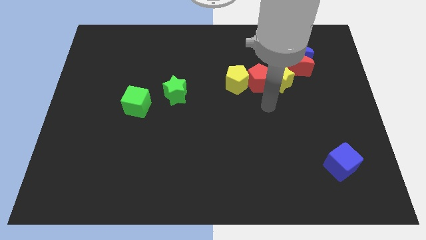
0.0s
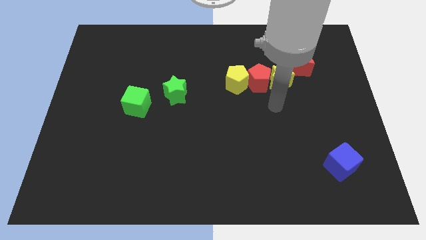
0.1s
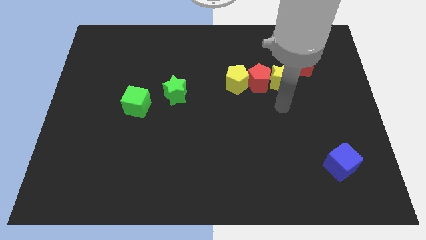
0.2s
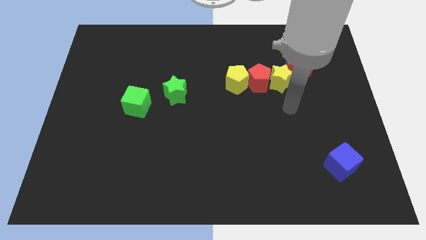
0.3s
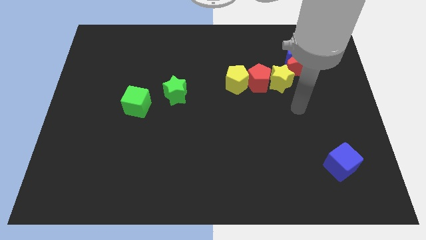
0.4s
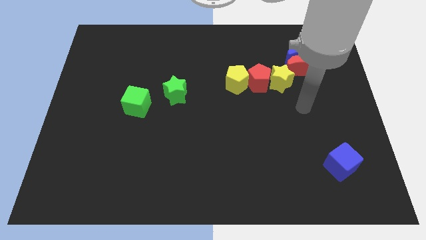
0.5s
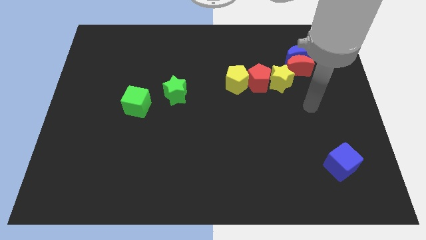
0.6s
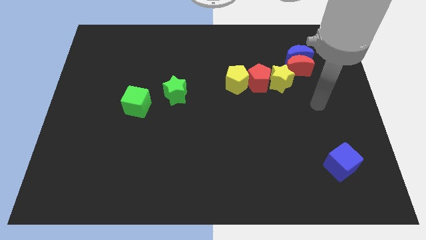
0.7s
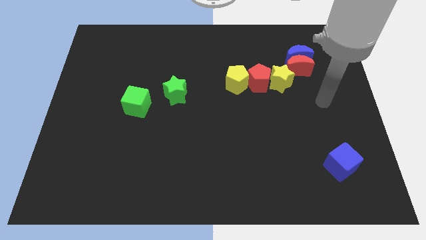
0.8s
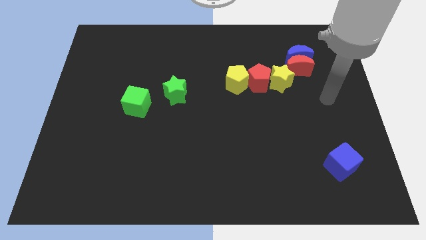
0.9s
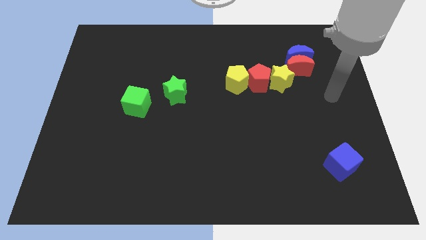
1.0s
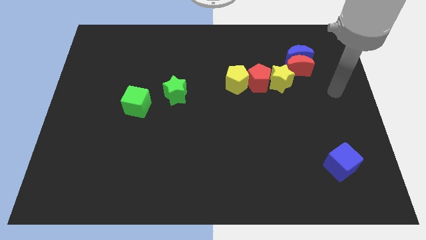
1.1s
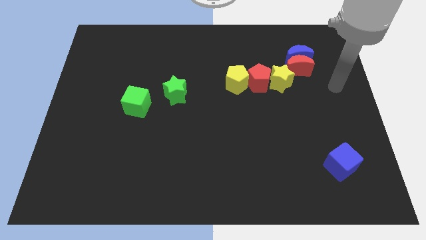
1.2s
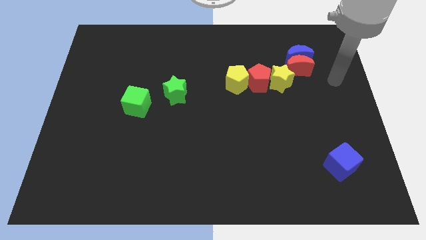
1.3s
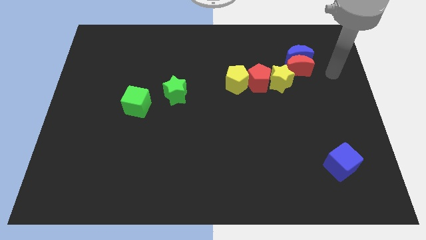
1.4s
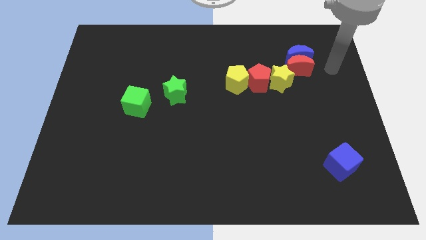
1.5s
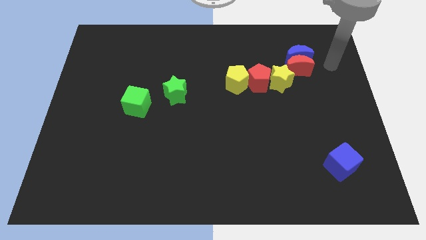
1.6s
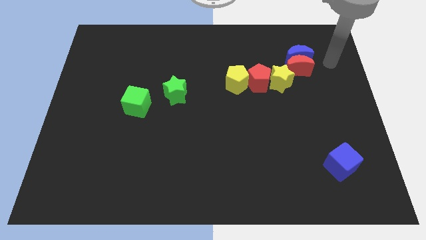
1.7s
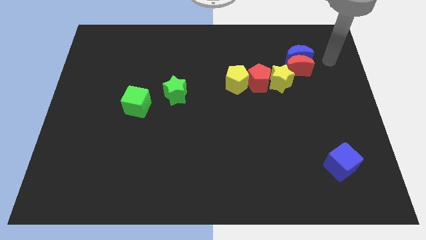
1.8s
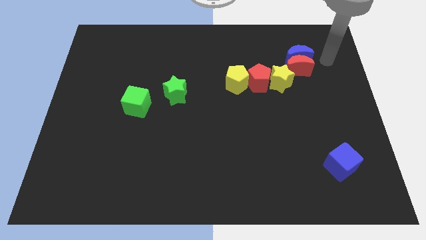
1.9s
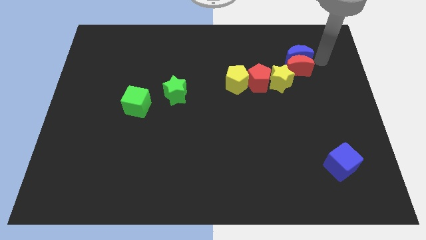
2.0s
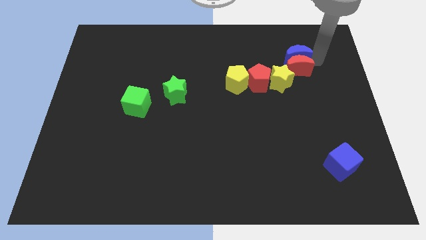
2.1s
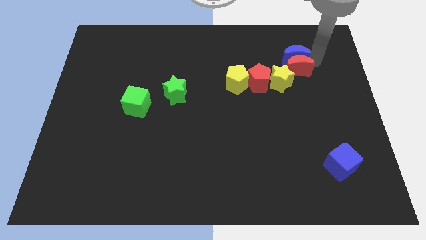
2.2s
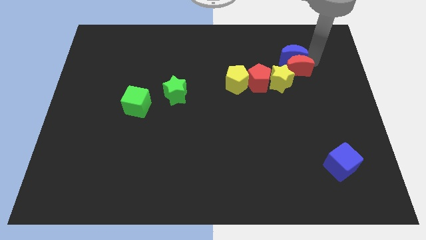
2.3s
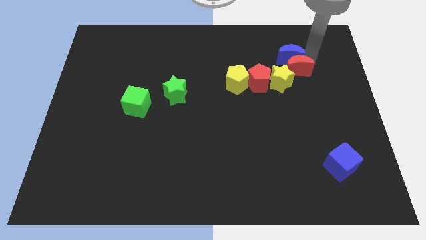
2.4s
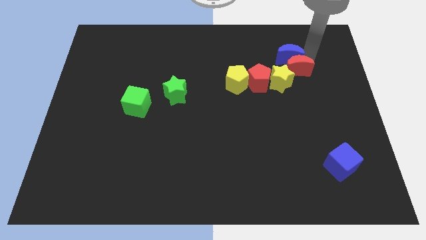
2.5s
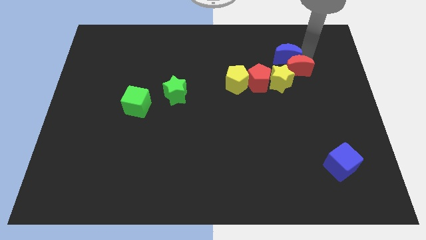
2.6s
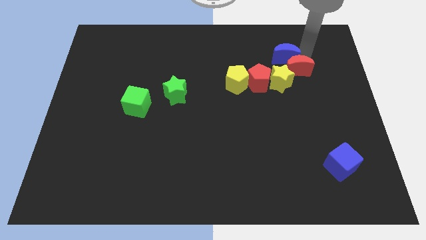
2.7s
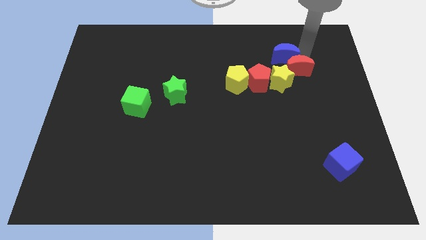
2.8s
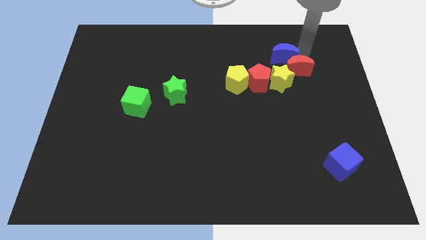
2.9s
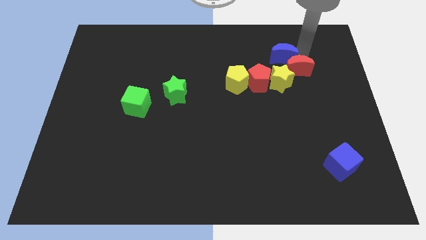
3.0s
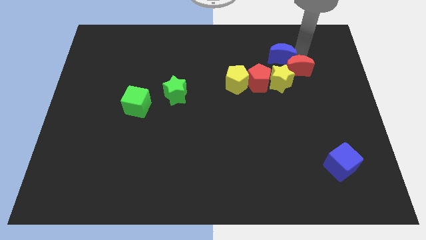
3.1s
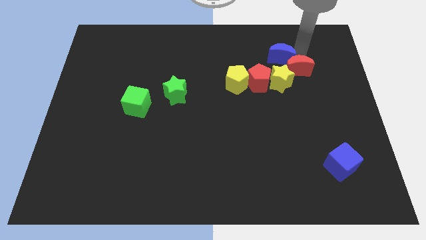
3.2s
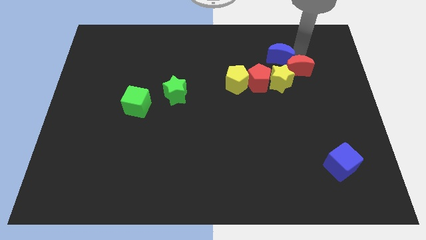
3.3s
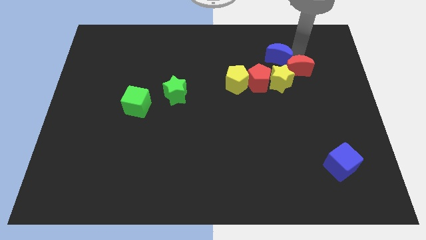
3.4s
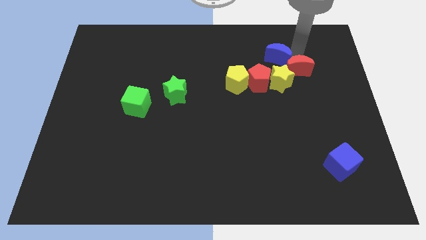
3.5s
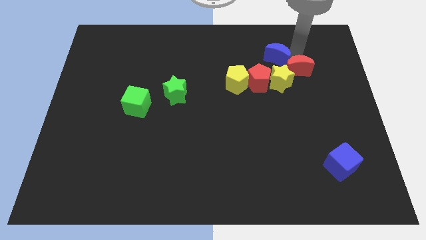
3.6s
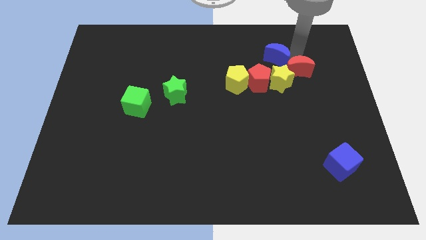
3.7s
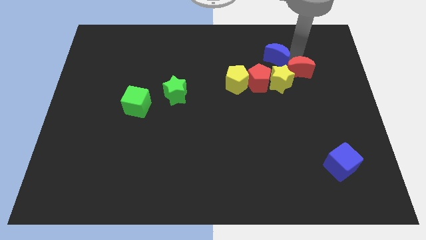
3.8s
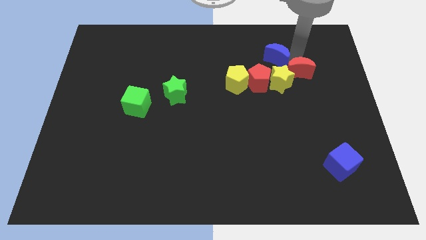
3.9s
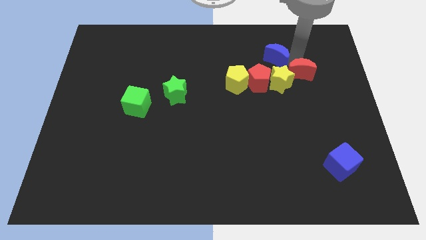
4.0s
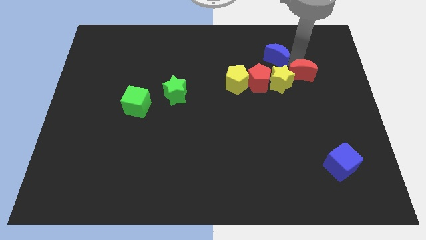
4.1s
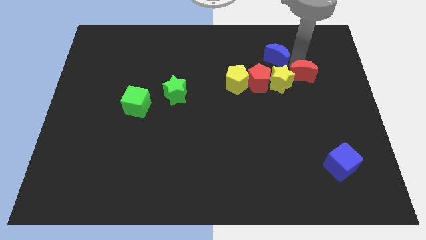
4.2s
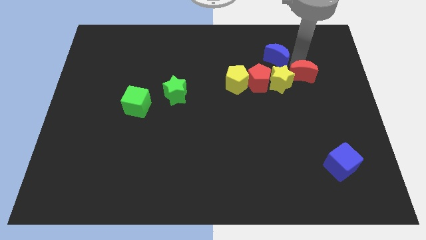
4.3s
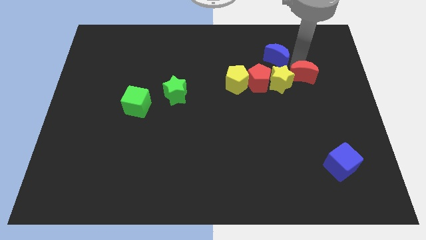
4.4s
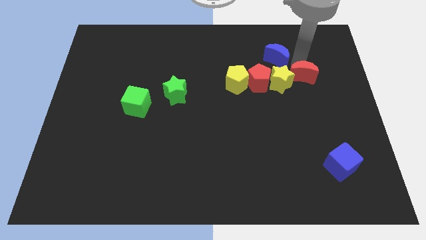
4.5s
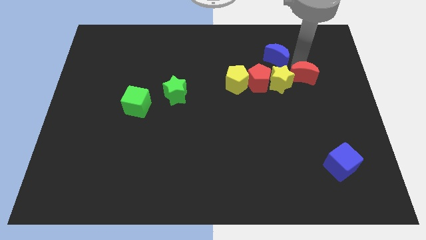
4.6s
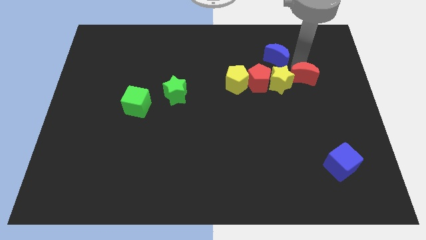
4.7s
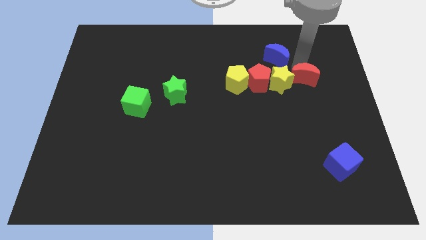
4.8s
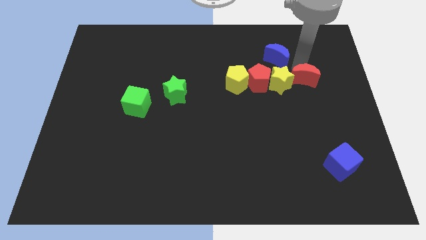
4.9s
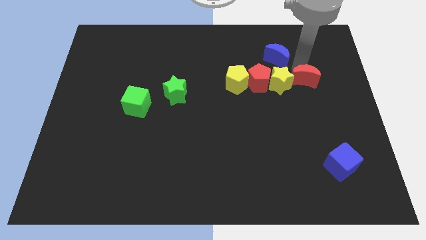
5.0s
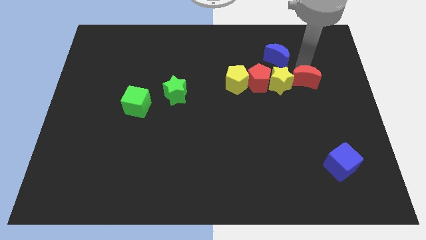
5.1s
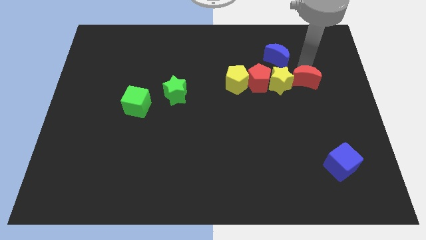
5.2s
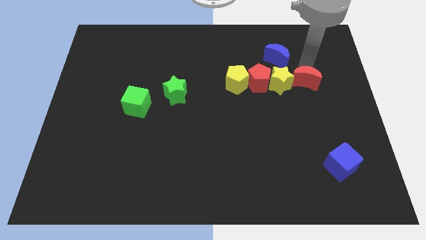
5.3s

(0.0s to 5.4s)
separate red moon and blue moon

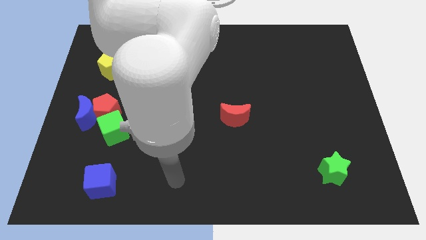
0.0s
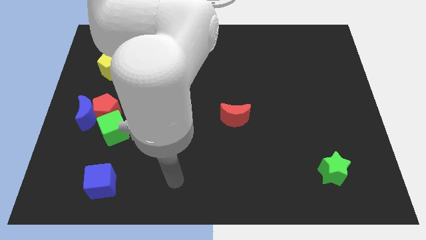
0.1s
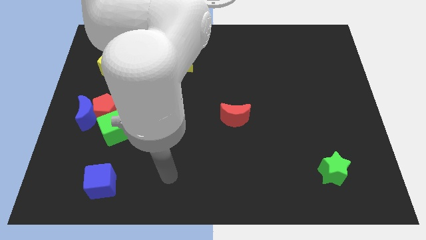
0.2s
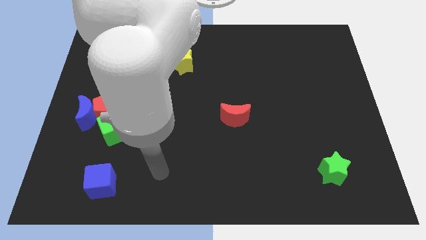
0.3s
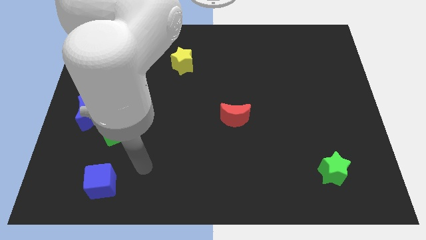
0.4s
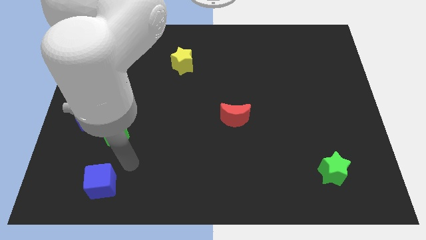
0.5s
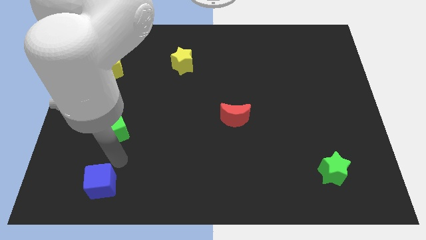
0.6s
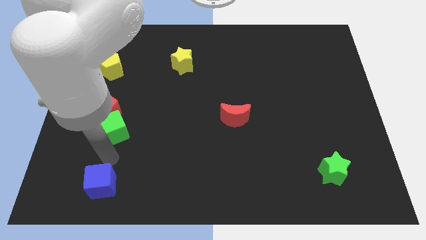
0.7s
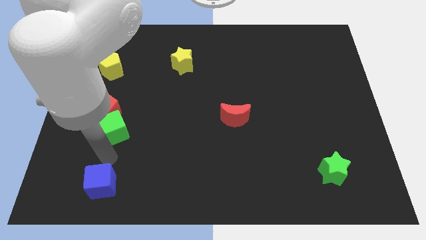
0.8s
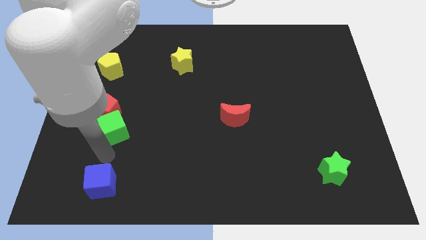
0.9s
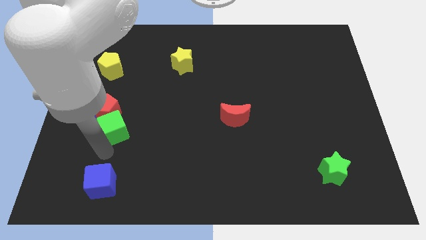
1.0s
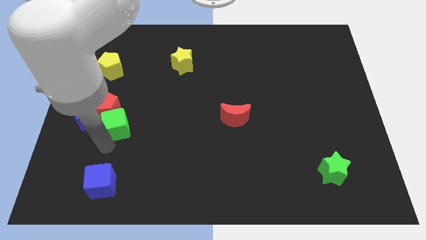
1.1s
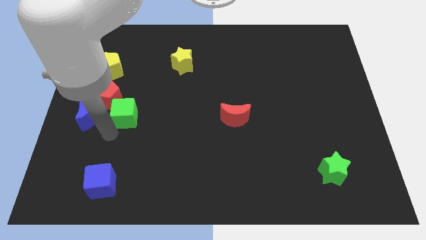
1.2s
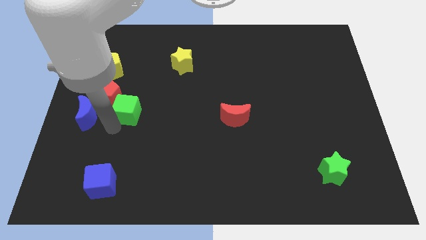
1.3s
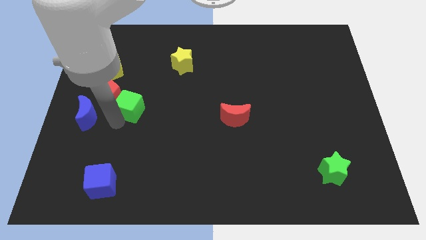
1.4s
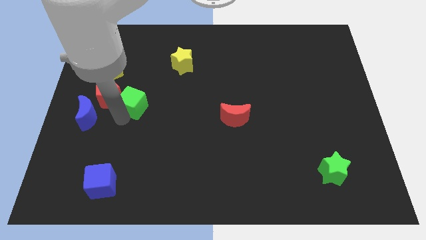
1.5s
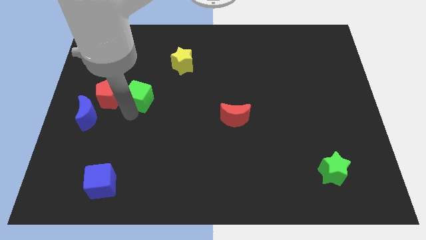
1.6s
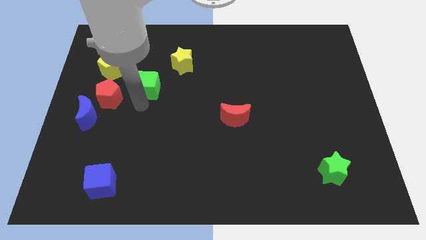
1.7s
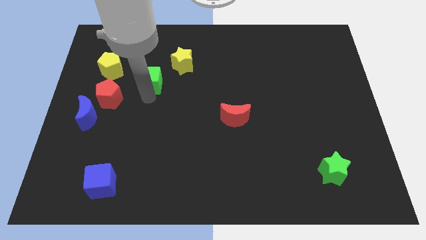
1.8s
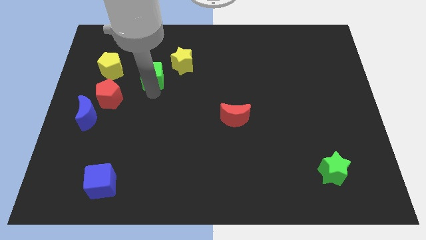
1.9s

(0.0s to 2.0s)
push the green cube between the yellow pentagon and the yellow star

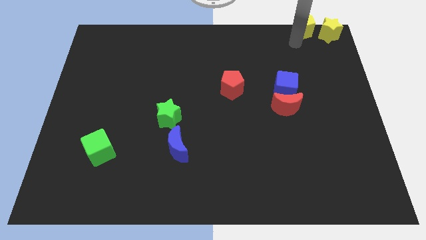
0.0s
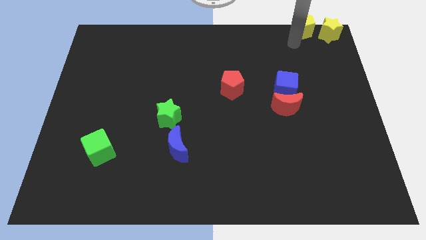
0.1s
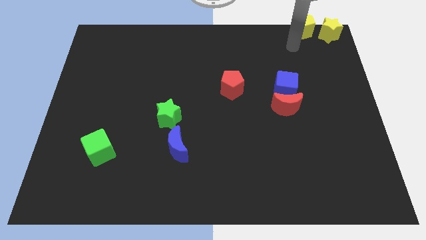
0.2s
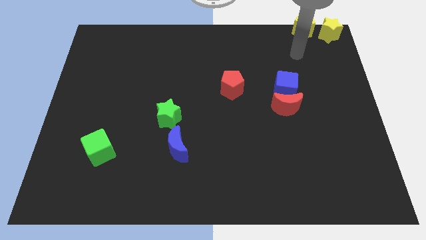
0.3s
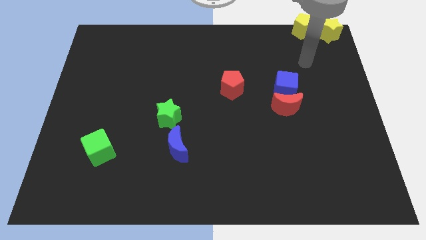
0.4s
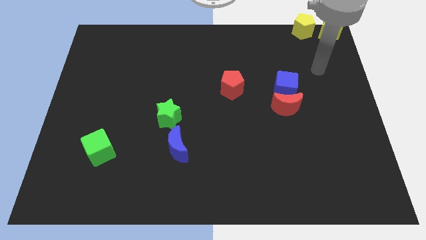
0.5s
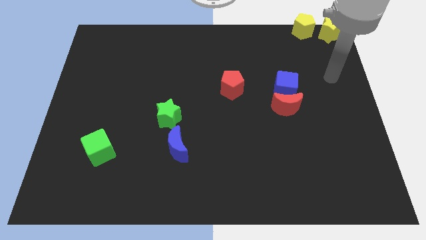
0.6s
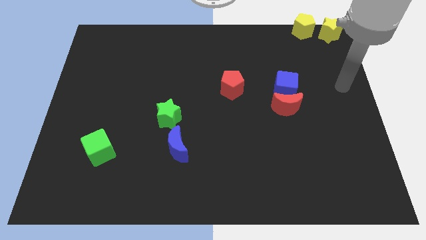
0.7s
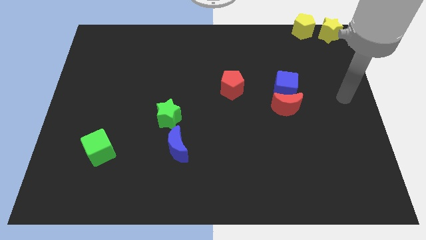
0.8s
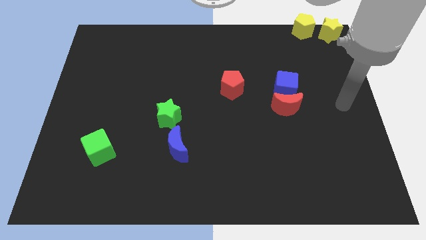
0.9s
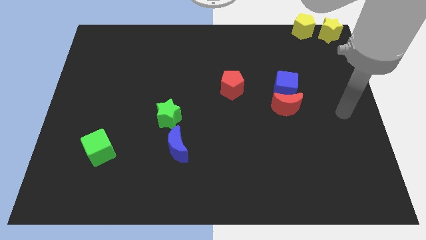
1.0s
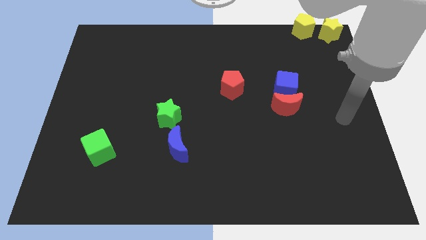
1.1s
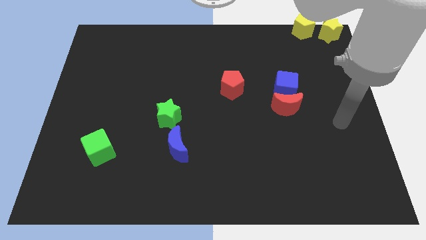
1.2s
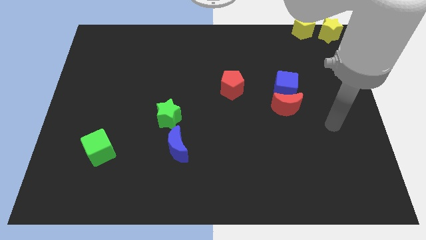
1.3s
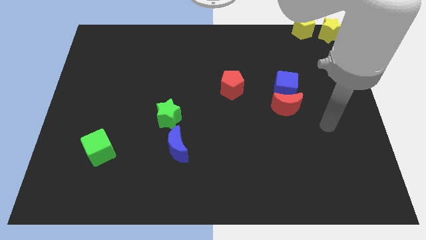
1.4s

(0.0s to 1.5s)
move your arm away from yellow pentagon
